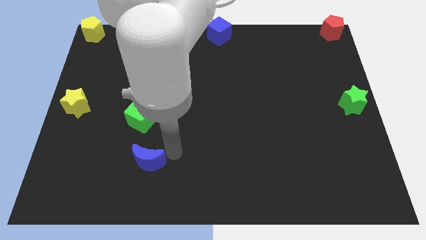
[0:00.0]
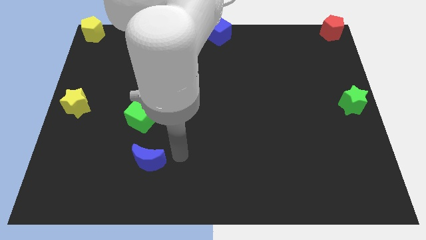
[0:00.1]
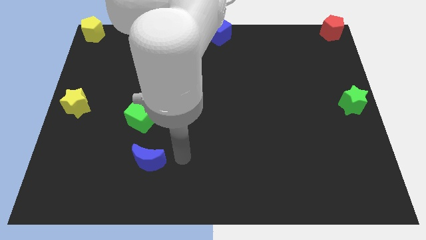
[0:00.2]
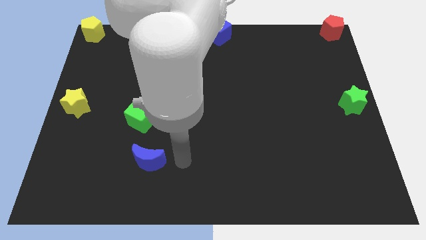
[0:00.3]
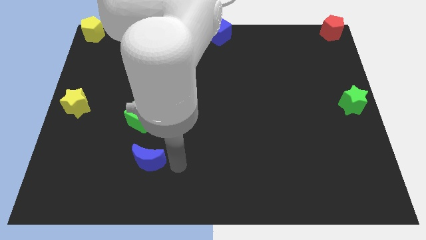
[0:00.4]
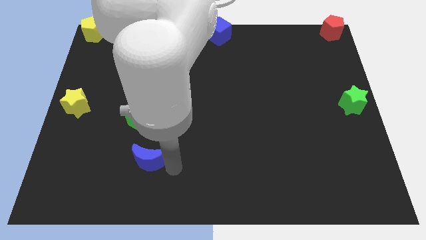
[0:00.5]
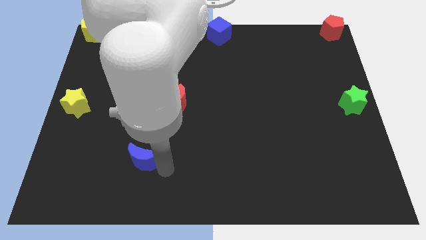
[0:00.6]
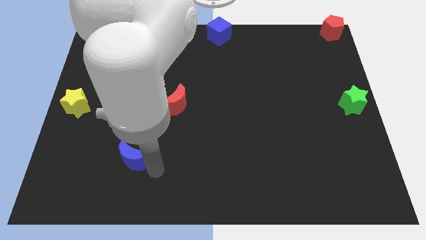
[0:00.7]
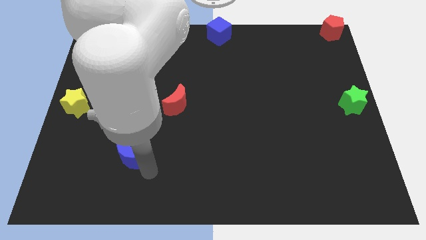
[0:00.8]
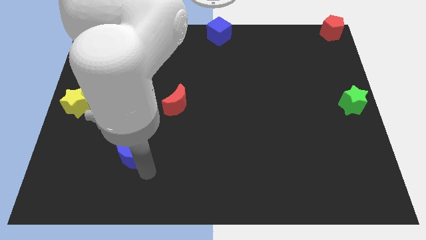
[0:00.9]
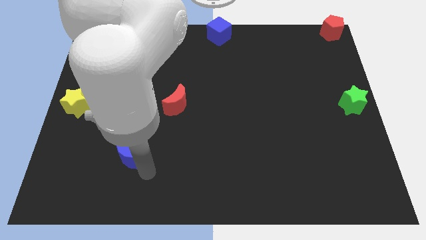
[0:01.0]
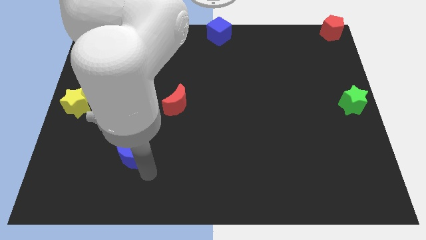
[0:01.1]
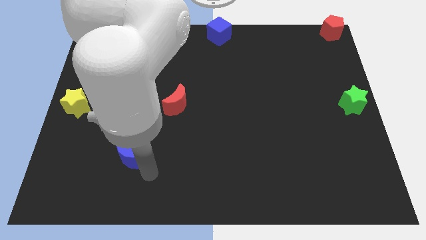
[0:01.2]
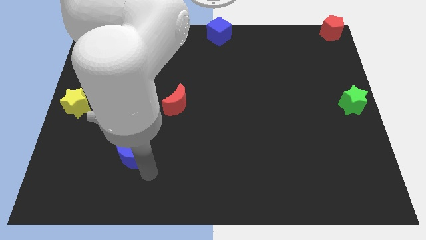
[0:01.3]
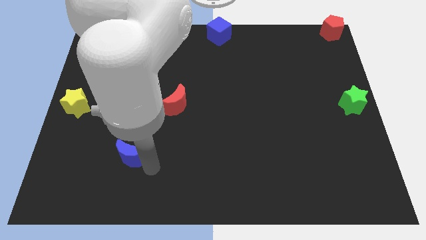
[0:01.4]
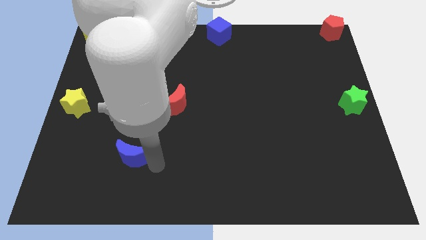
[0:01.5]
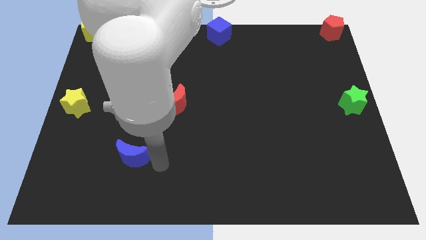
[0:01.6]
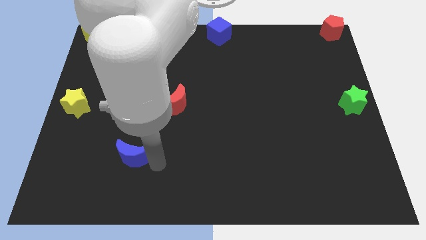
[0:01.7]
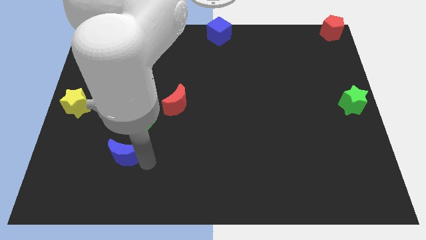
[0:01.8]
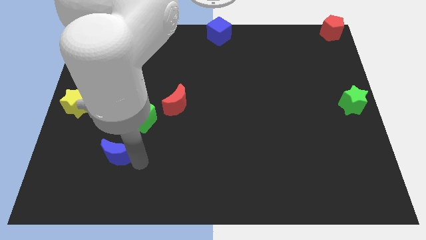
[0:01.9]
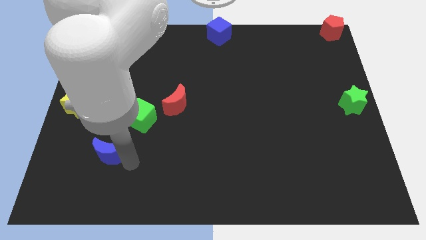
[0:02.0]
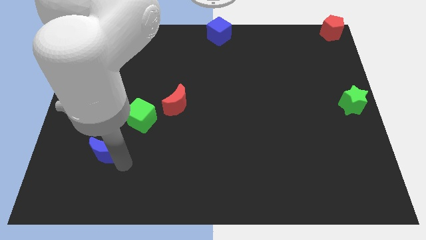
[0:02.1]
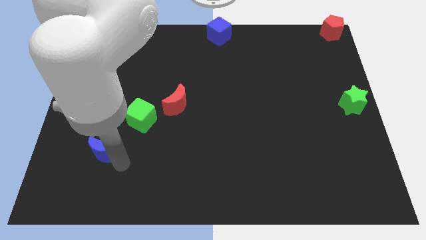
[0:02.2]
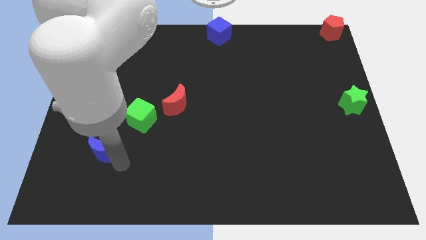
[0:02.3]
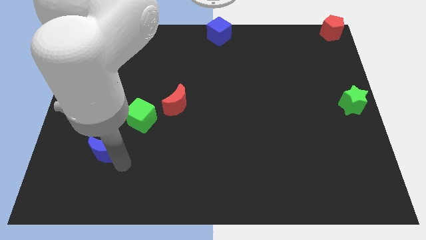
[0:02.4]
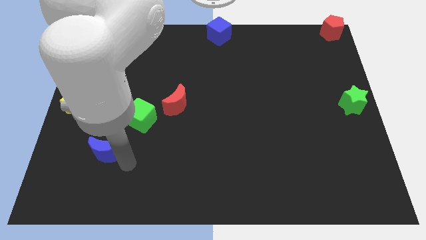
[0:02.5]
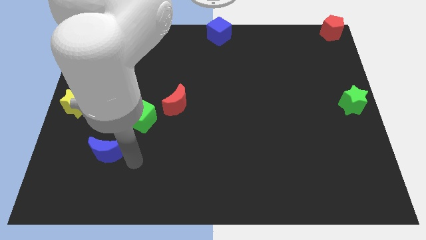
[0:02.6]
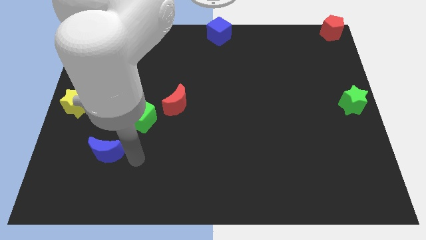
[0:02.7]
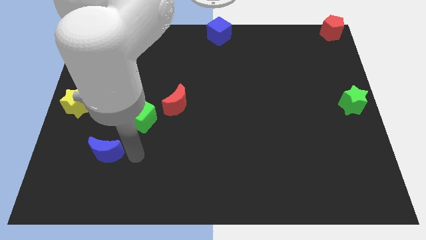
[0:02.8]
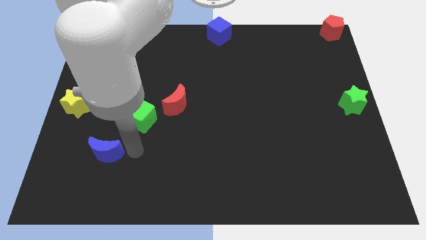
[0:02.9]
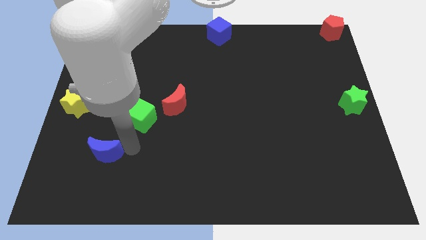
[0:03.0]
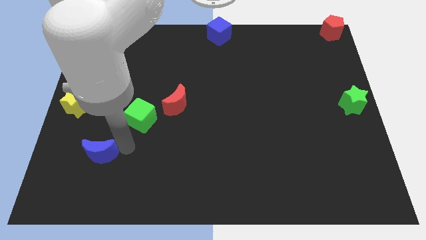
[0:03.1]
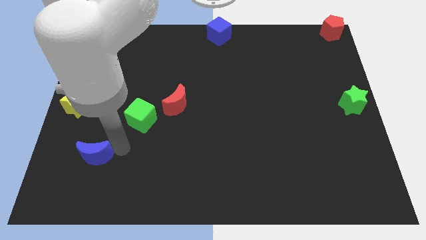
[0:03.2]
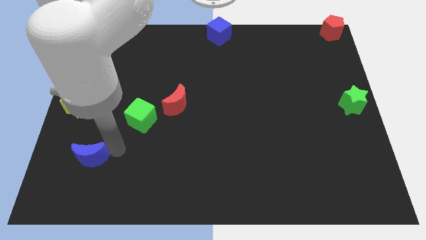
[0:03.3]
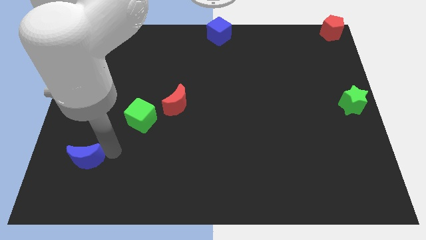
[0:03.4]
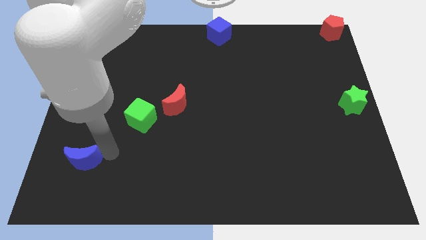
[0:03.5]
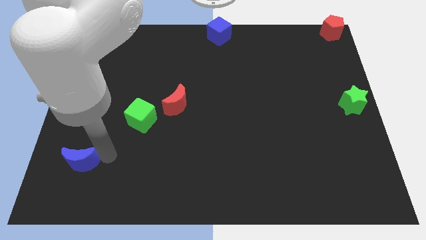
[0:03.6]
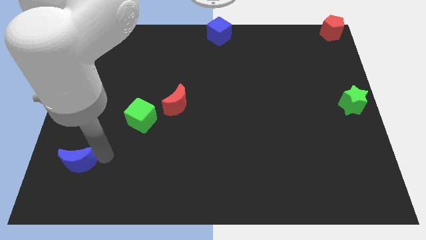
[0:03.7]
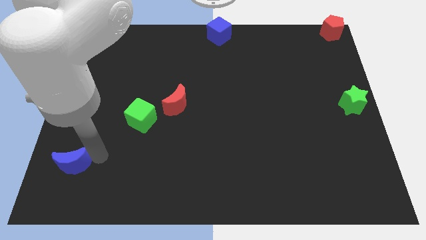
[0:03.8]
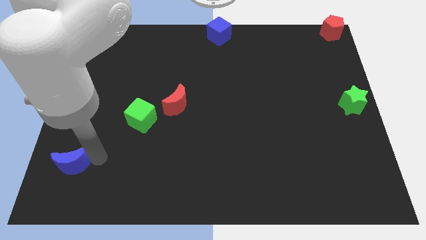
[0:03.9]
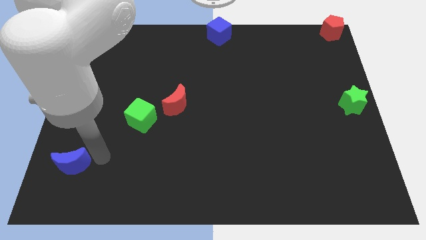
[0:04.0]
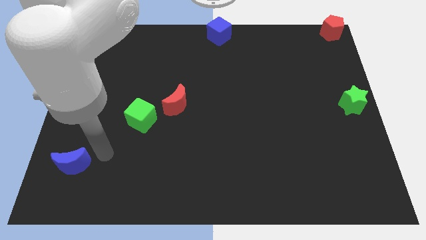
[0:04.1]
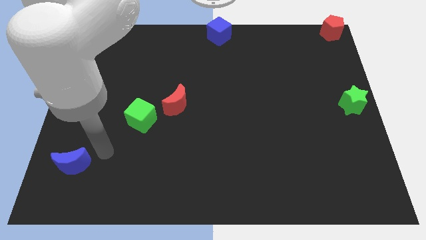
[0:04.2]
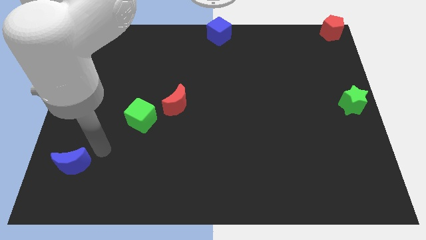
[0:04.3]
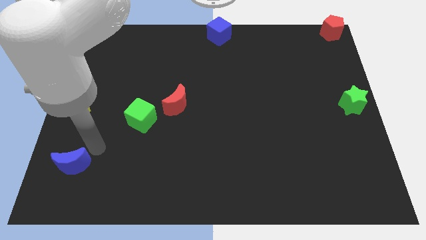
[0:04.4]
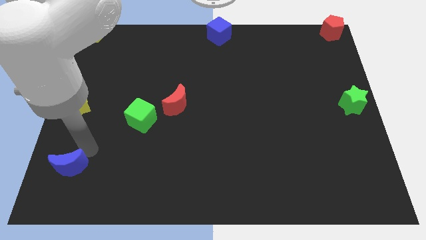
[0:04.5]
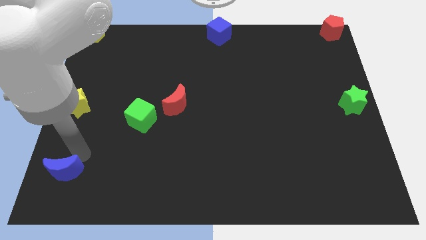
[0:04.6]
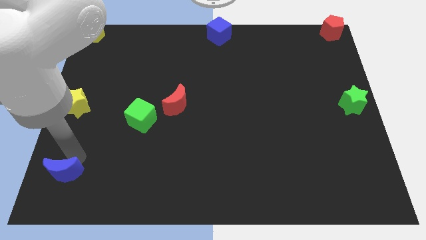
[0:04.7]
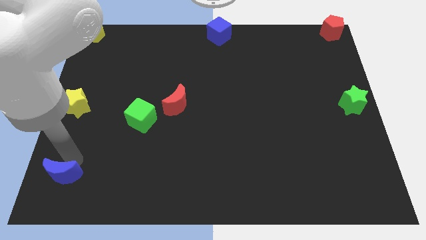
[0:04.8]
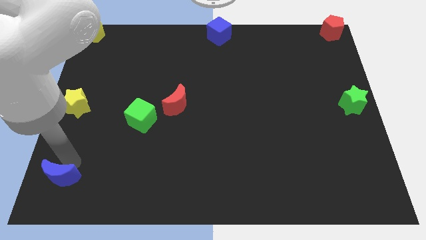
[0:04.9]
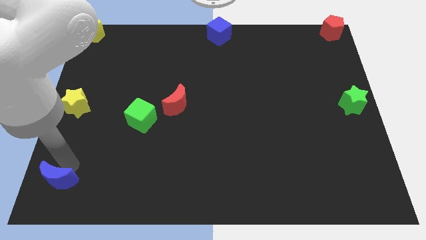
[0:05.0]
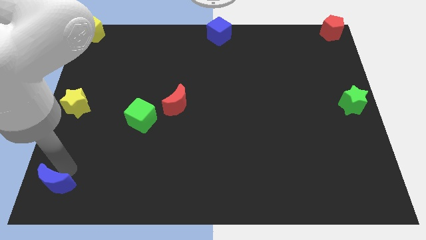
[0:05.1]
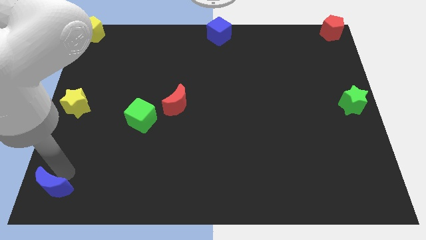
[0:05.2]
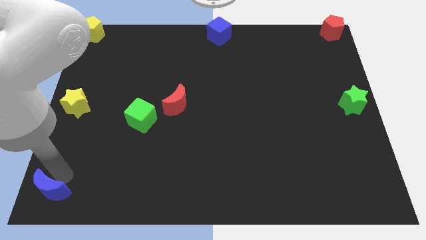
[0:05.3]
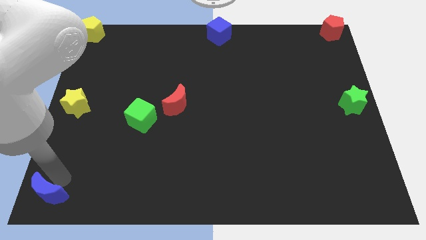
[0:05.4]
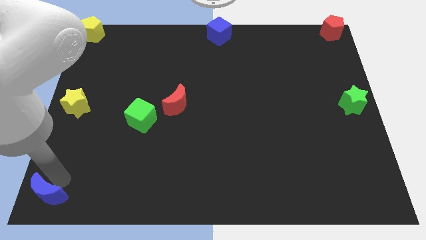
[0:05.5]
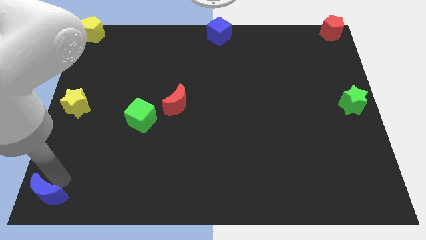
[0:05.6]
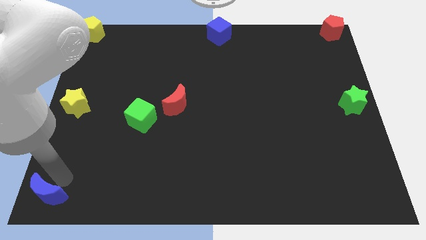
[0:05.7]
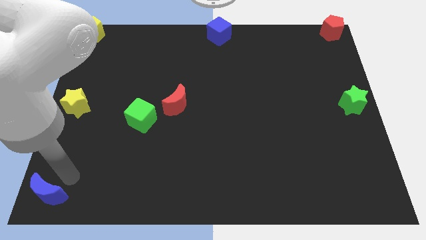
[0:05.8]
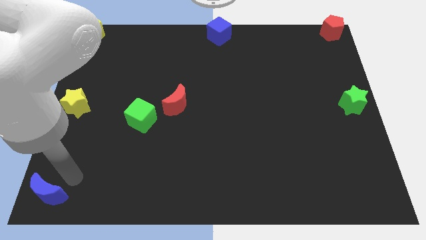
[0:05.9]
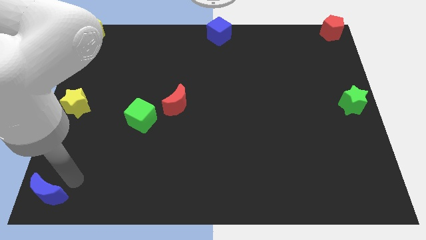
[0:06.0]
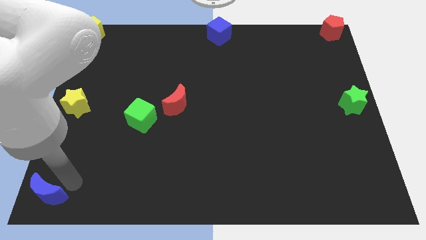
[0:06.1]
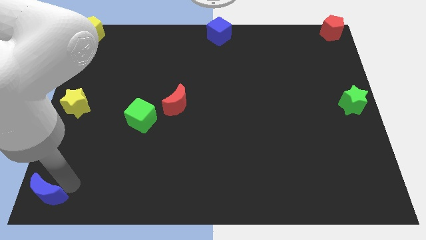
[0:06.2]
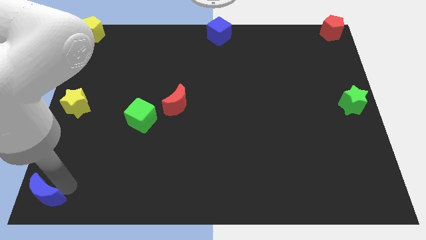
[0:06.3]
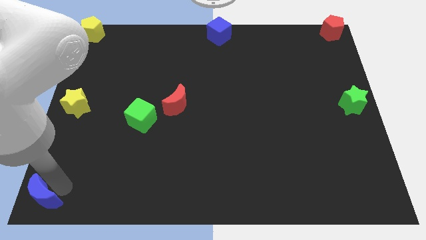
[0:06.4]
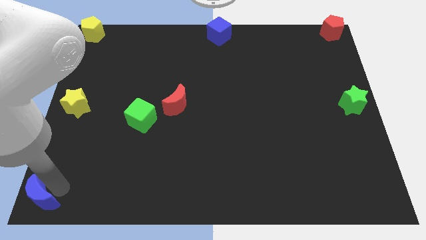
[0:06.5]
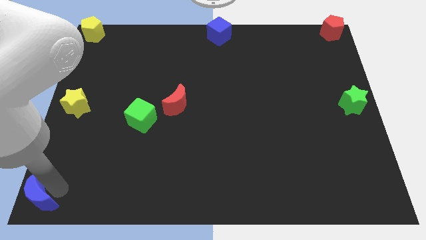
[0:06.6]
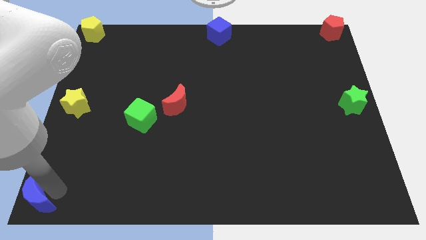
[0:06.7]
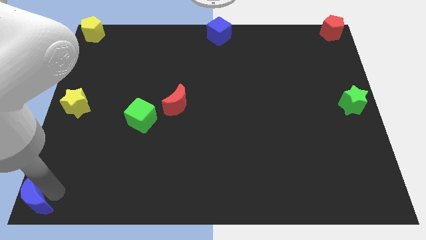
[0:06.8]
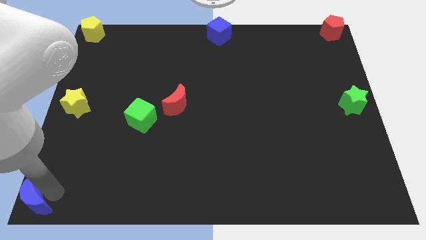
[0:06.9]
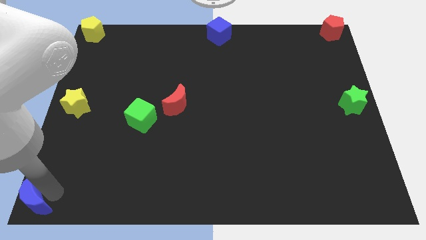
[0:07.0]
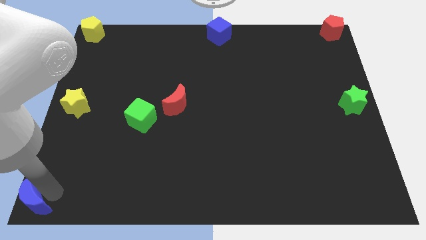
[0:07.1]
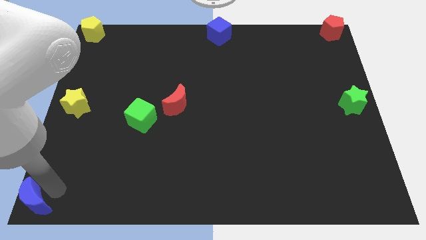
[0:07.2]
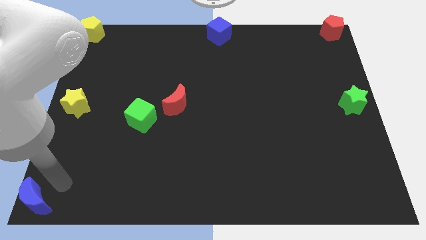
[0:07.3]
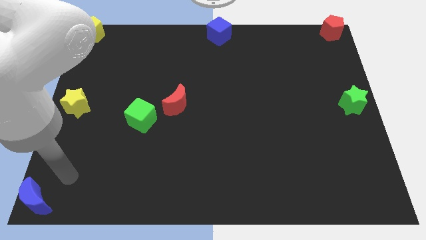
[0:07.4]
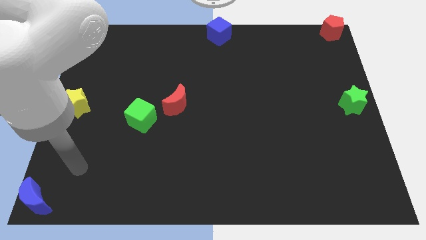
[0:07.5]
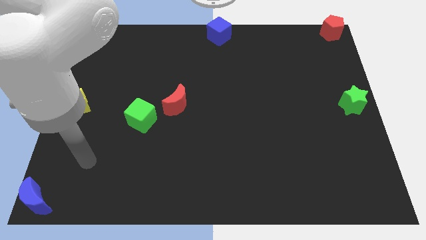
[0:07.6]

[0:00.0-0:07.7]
push the blue moon to the bottom left corner of the board

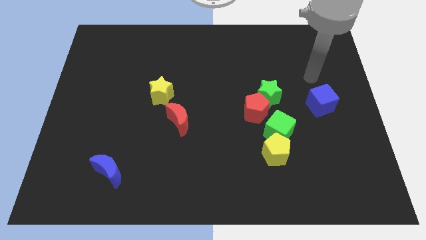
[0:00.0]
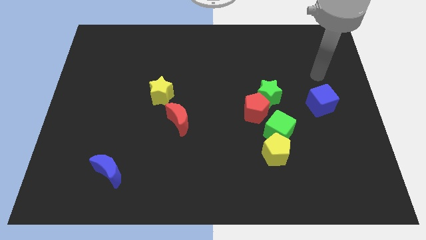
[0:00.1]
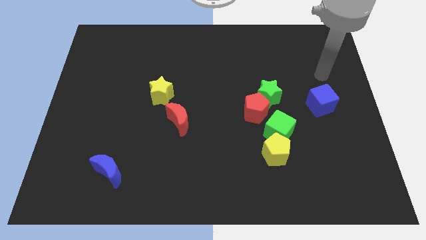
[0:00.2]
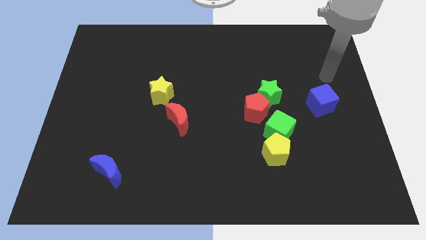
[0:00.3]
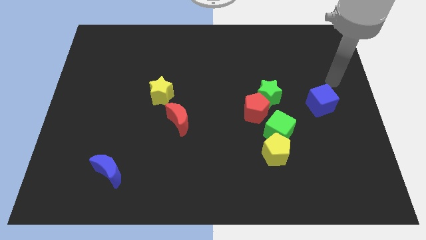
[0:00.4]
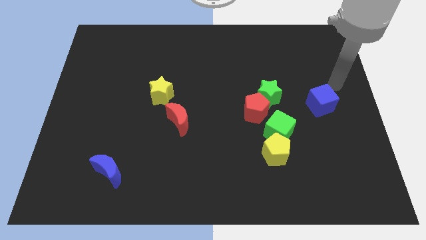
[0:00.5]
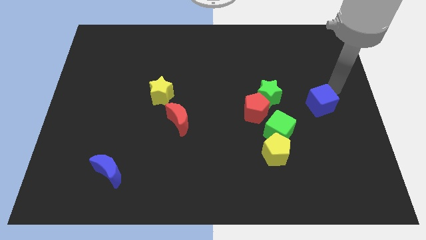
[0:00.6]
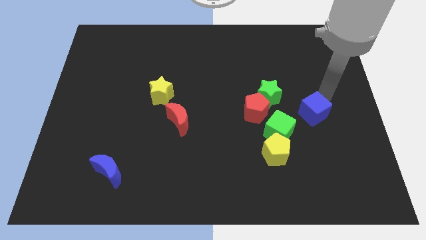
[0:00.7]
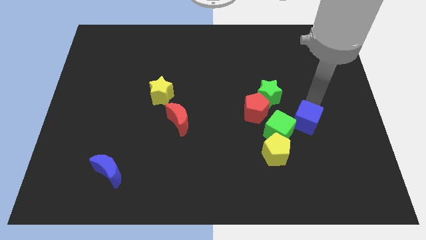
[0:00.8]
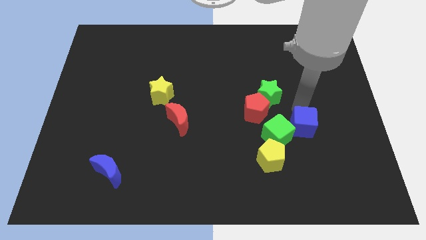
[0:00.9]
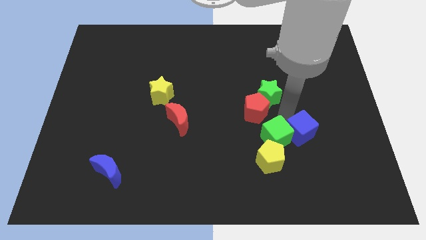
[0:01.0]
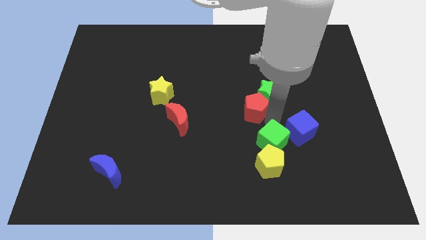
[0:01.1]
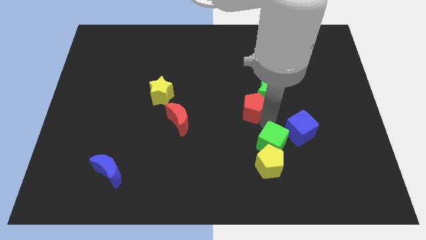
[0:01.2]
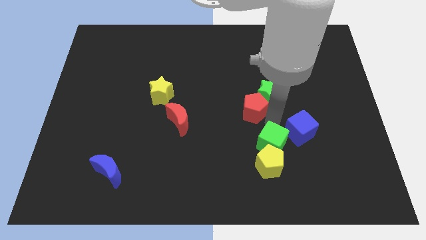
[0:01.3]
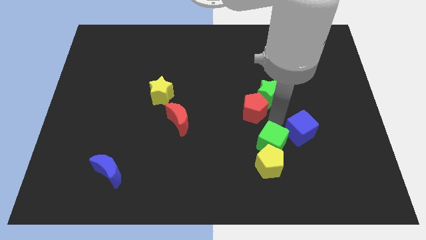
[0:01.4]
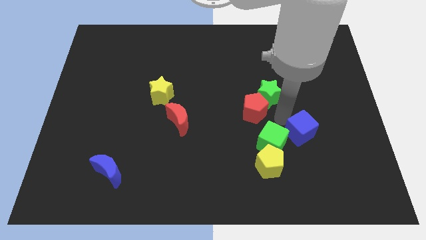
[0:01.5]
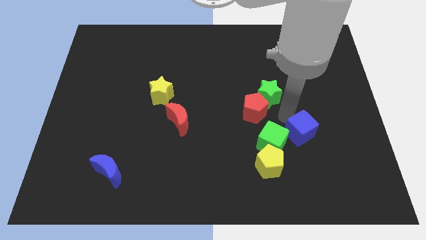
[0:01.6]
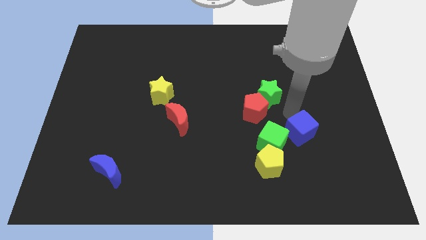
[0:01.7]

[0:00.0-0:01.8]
push blue cube into the green cube
